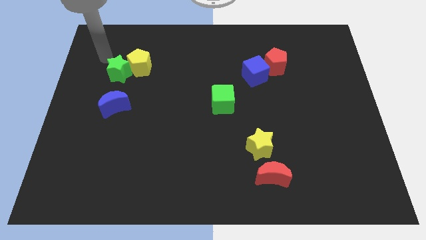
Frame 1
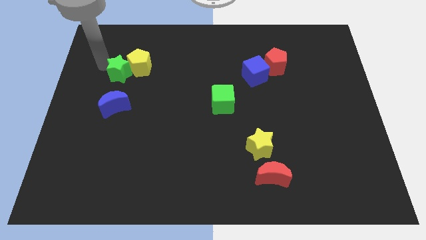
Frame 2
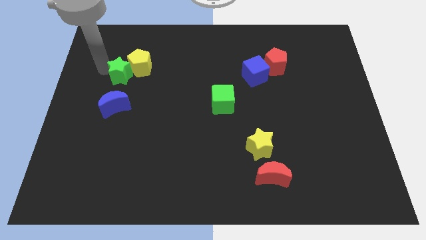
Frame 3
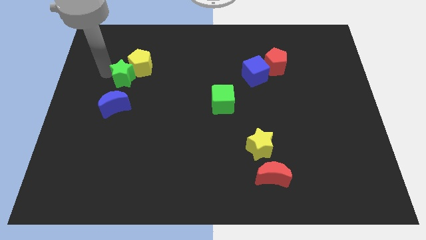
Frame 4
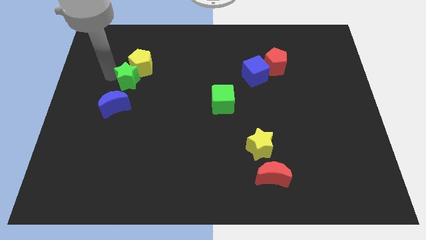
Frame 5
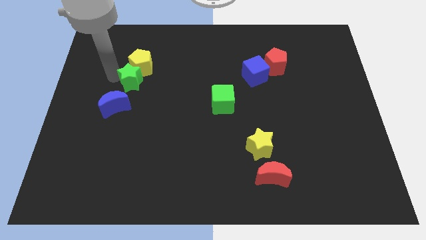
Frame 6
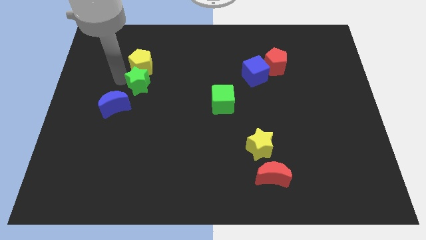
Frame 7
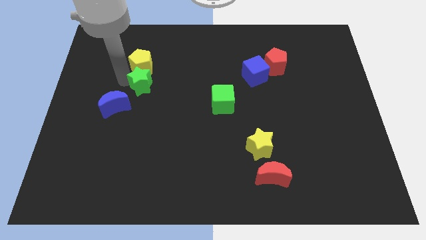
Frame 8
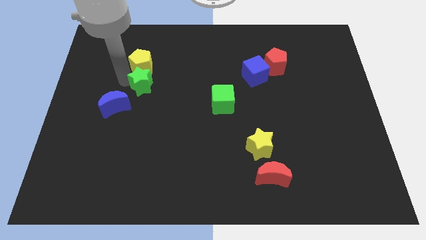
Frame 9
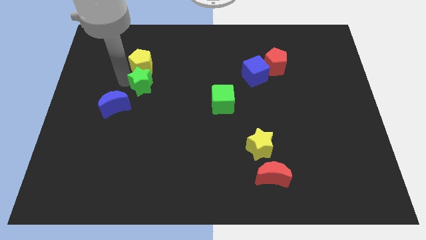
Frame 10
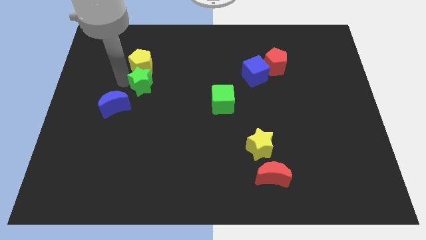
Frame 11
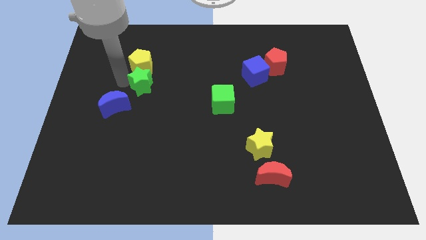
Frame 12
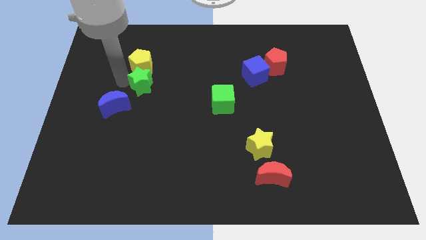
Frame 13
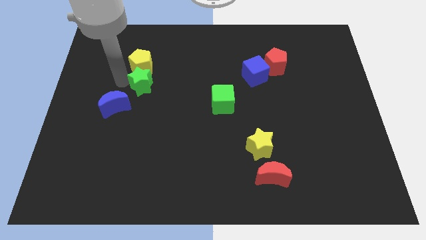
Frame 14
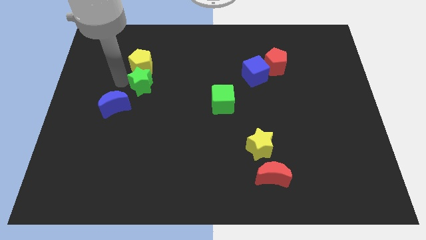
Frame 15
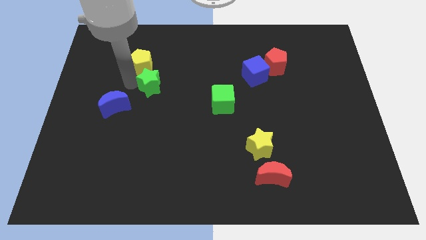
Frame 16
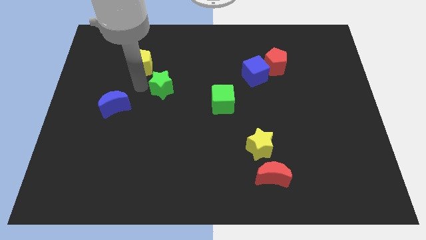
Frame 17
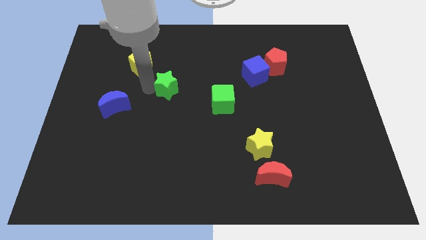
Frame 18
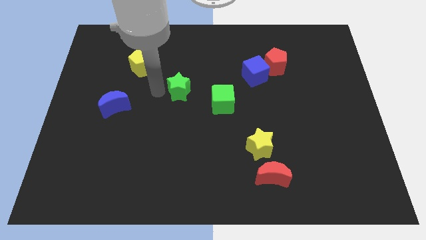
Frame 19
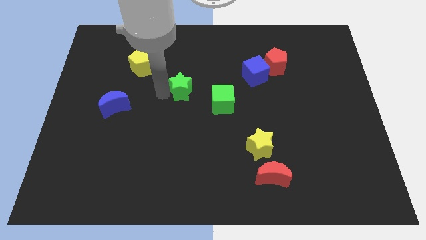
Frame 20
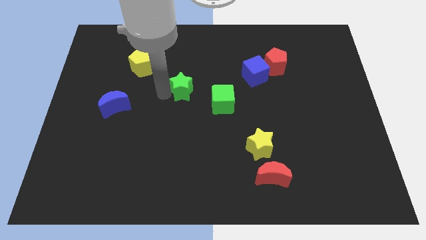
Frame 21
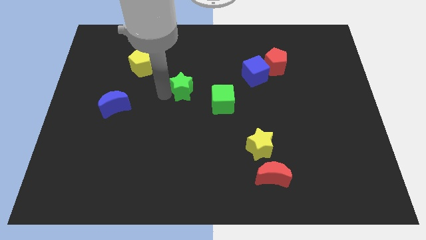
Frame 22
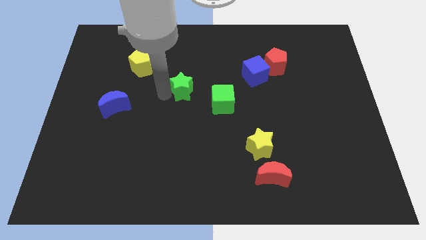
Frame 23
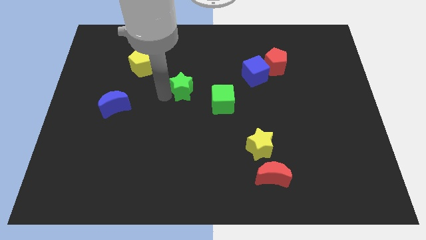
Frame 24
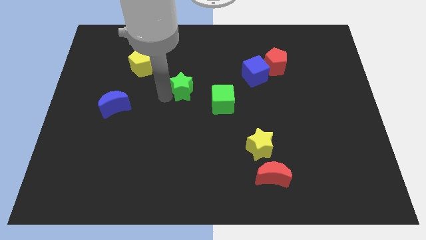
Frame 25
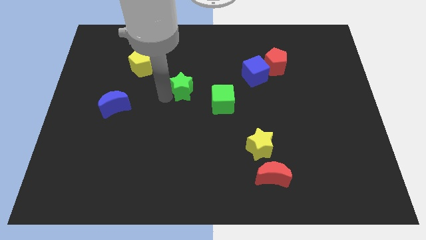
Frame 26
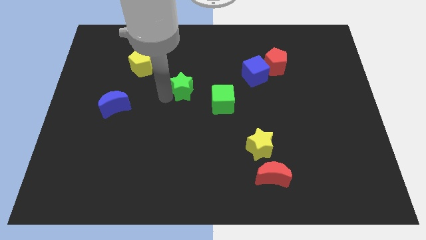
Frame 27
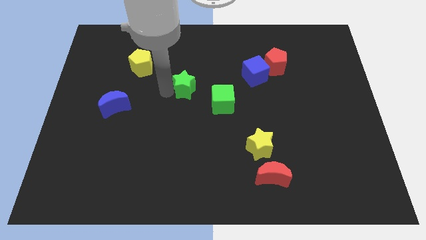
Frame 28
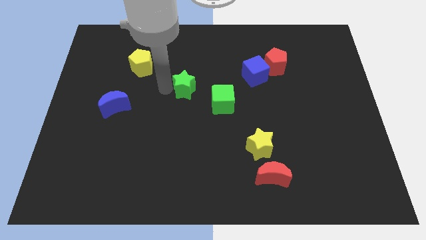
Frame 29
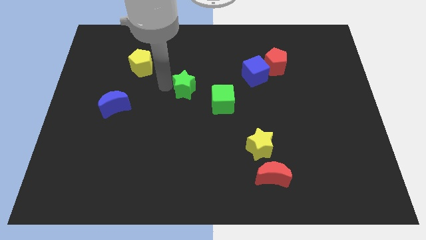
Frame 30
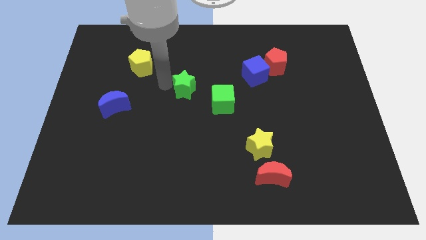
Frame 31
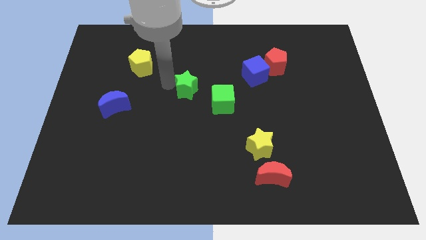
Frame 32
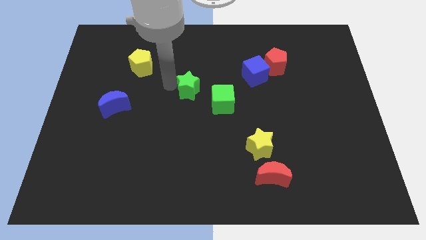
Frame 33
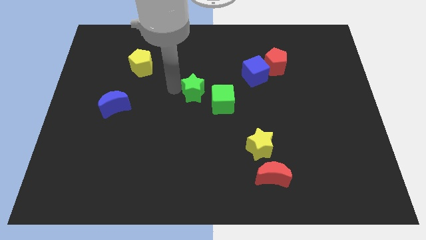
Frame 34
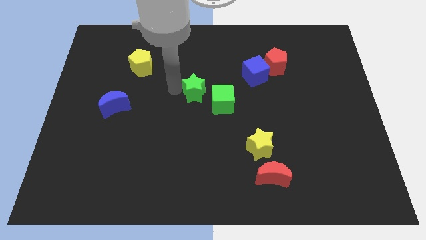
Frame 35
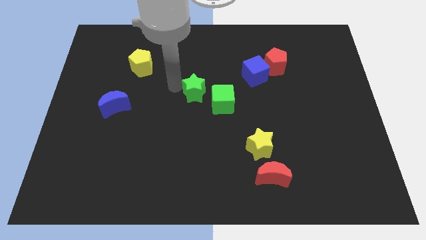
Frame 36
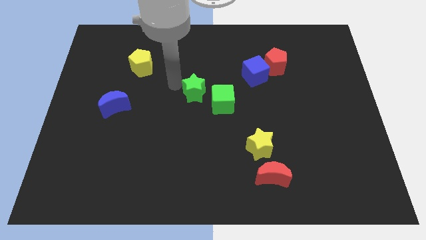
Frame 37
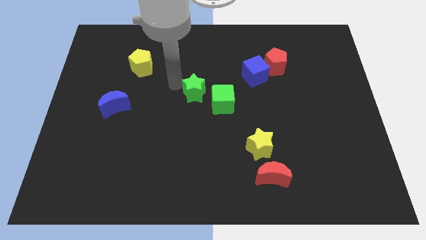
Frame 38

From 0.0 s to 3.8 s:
push the green star away from the yellow pentagon

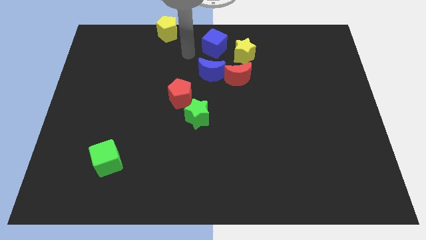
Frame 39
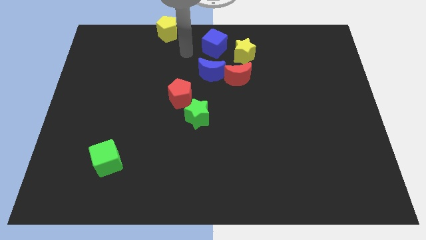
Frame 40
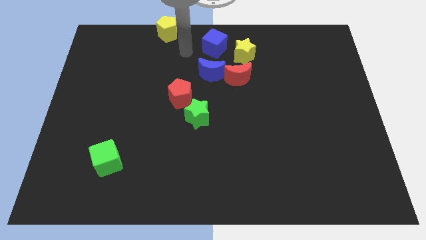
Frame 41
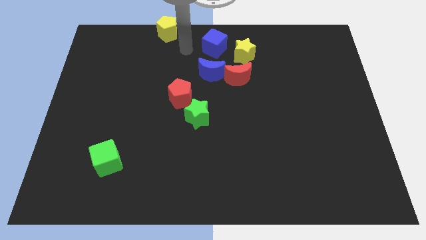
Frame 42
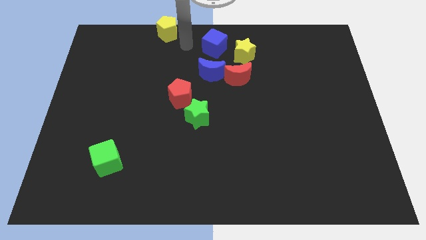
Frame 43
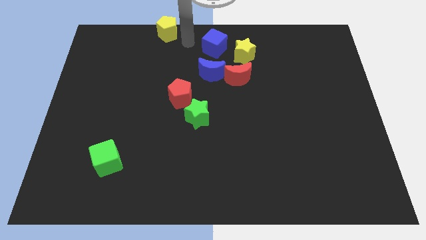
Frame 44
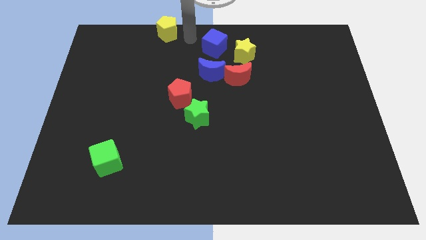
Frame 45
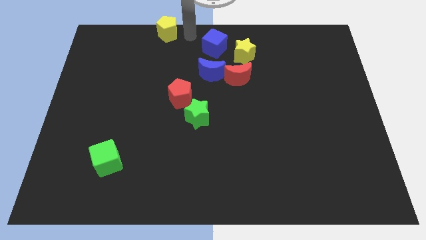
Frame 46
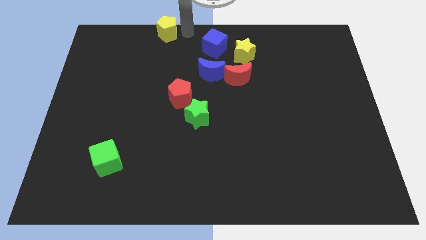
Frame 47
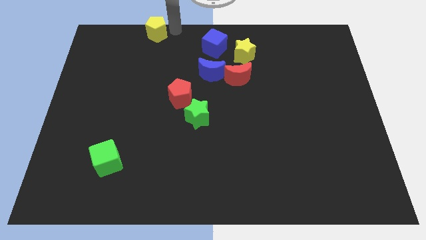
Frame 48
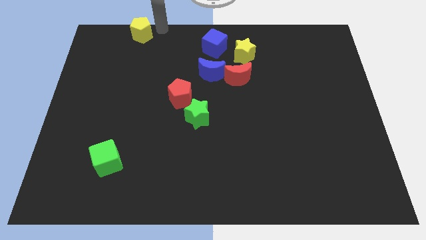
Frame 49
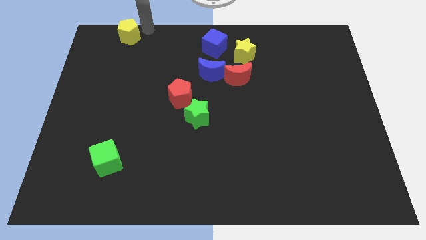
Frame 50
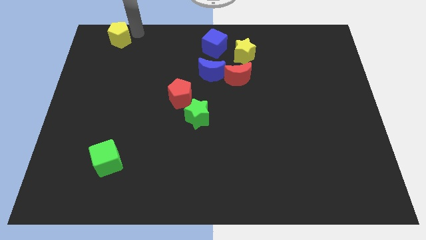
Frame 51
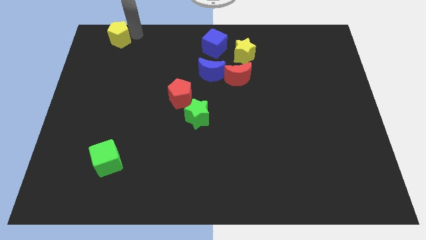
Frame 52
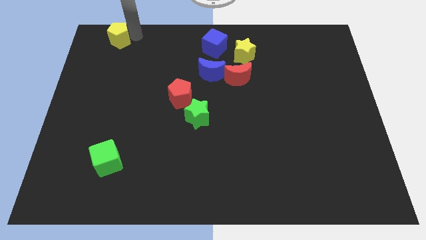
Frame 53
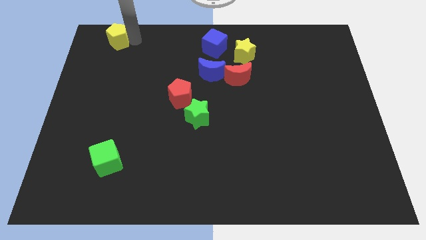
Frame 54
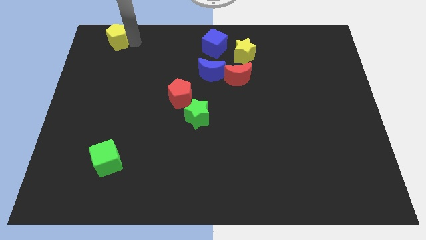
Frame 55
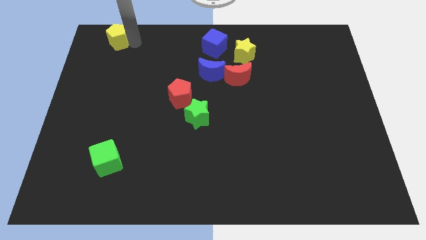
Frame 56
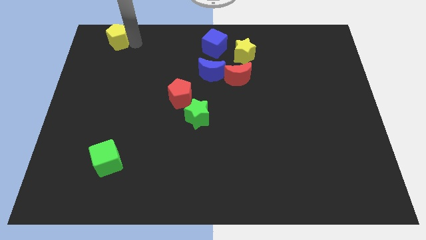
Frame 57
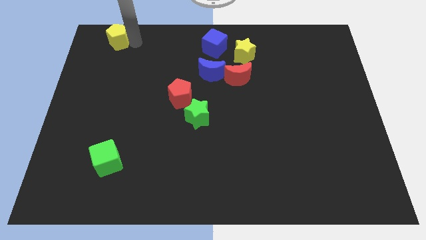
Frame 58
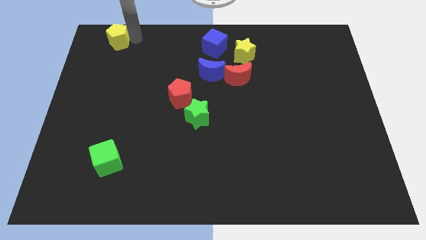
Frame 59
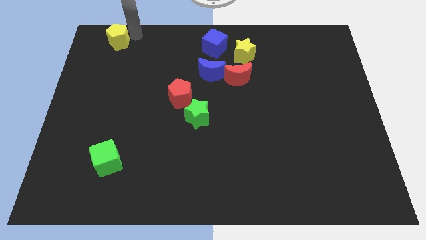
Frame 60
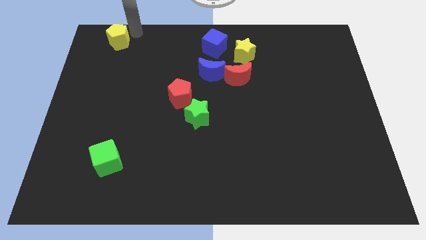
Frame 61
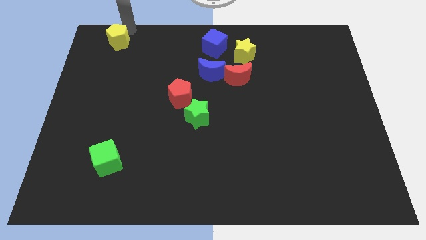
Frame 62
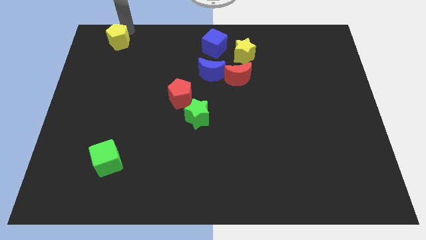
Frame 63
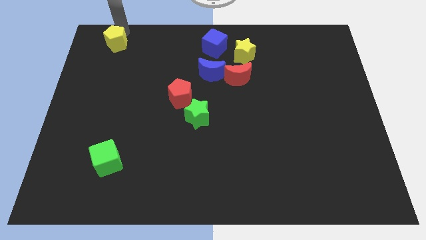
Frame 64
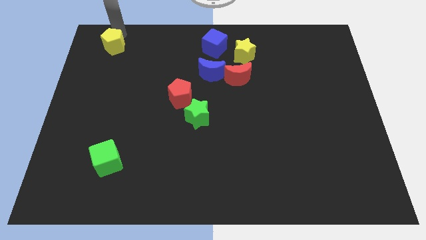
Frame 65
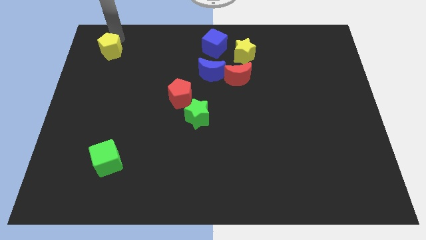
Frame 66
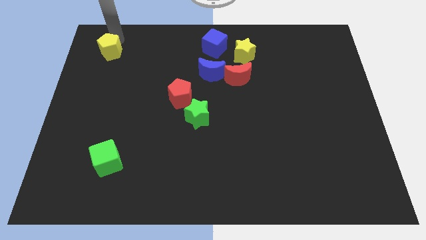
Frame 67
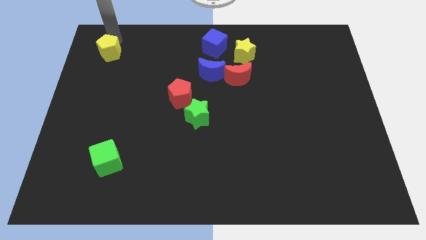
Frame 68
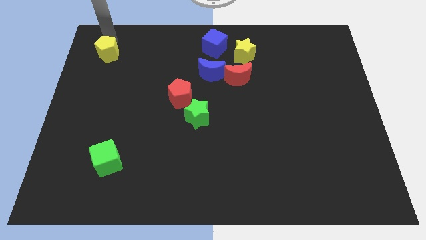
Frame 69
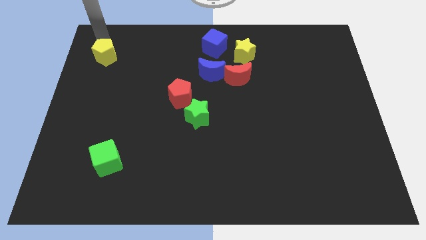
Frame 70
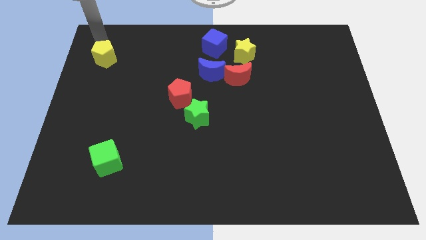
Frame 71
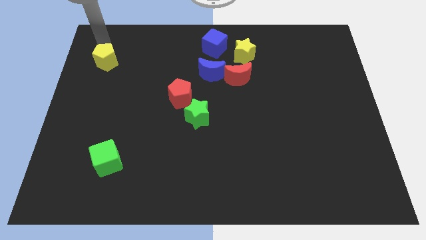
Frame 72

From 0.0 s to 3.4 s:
place yellow pentagon to the top left corner of the board

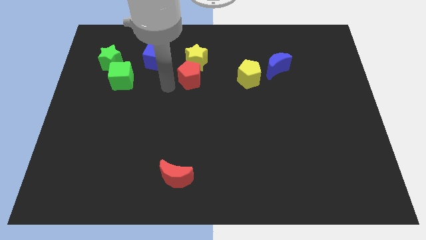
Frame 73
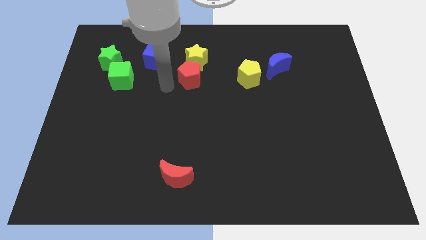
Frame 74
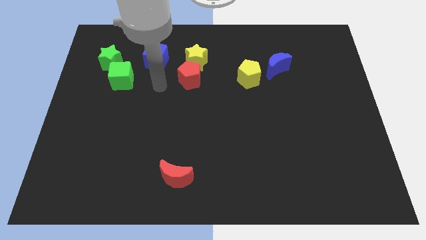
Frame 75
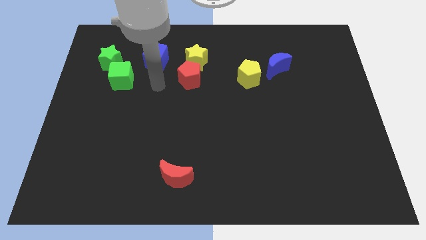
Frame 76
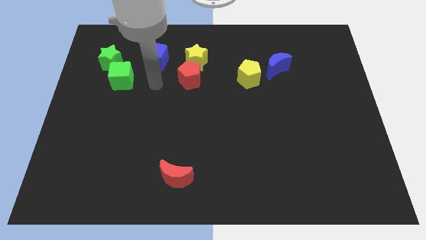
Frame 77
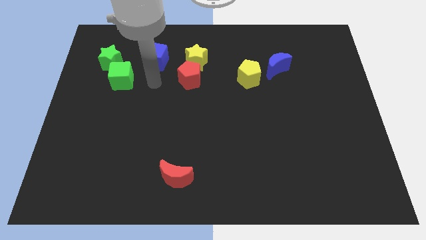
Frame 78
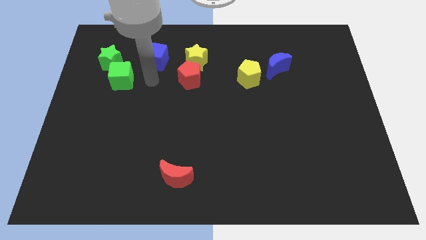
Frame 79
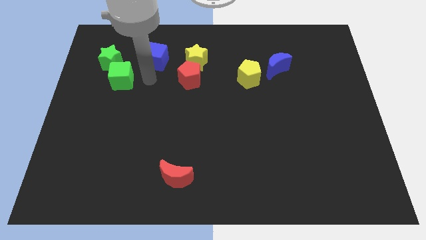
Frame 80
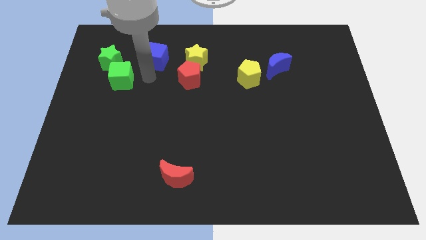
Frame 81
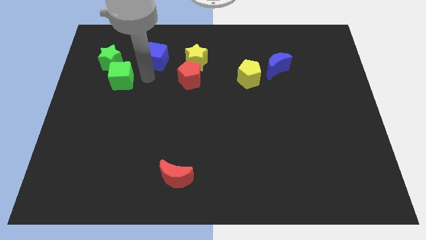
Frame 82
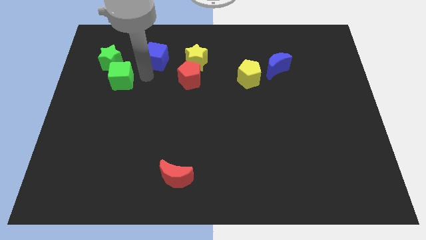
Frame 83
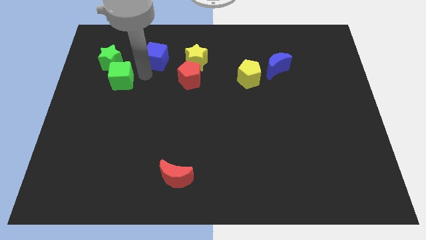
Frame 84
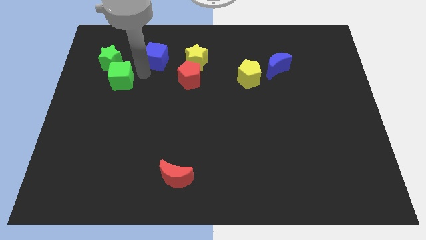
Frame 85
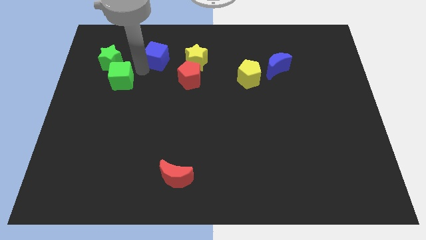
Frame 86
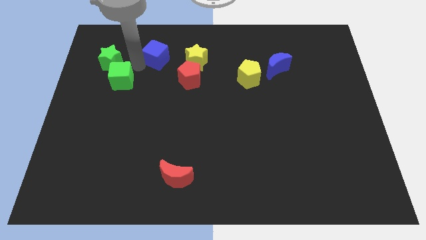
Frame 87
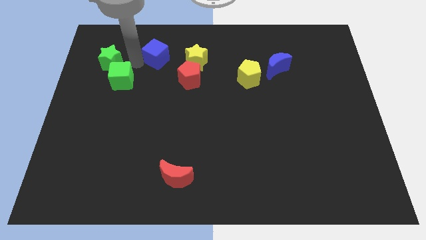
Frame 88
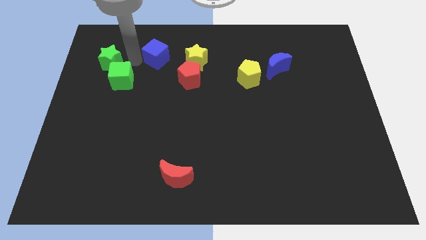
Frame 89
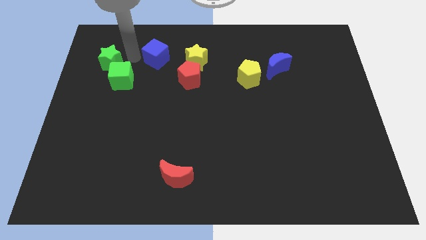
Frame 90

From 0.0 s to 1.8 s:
put your hand in between the green star and blue cube

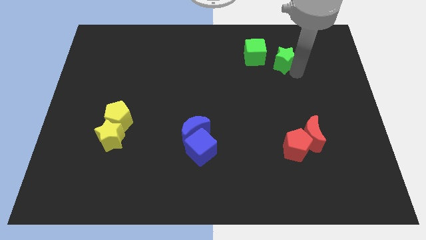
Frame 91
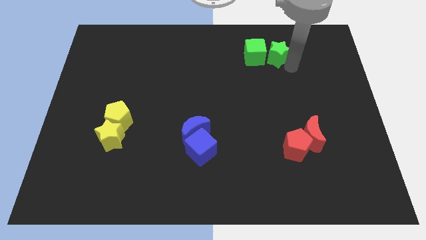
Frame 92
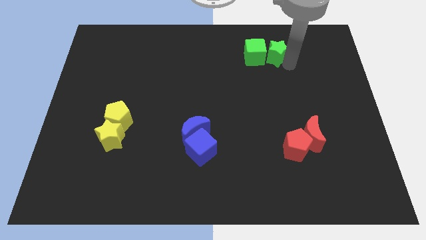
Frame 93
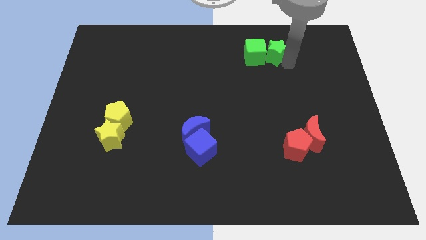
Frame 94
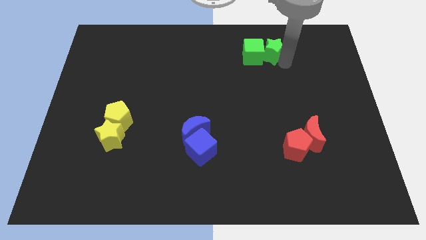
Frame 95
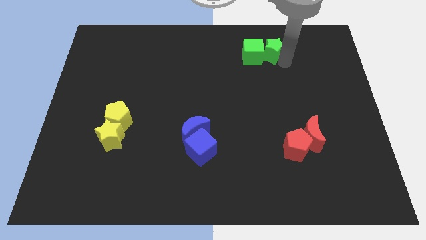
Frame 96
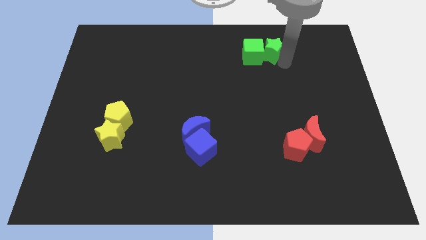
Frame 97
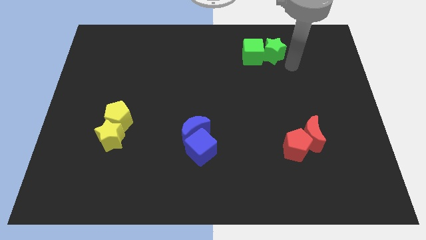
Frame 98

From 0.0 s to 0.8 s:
push the green star to the right of the green cube
